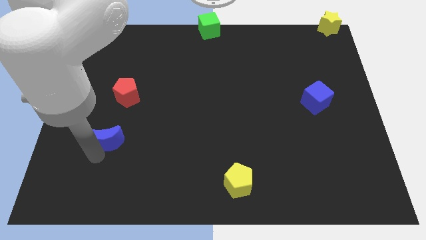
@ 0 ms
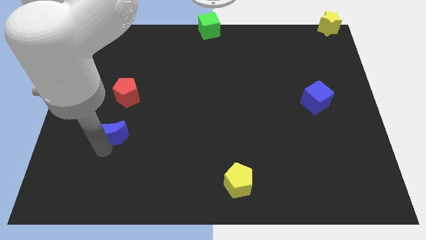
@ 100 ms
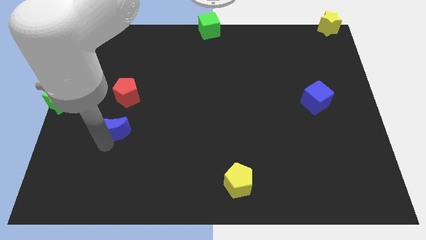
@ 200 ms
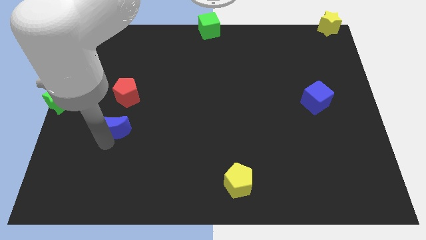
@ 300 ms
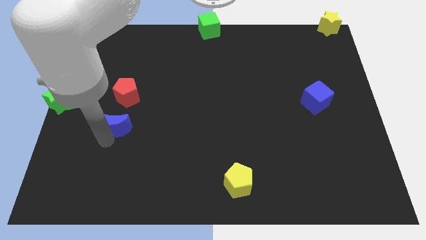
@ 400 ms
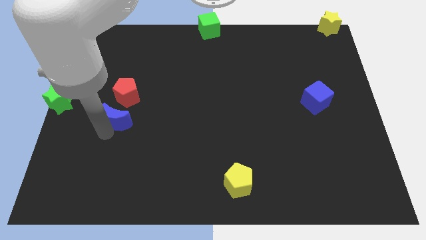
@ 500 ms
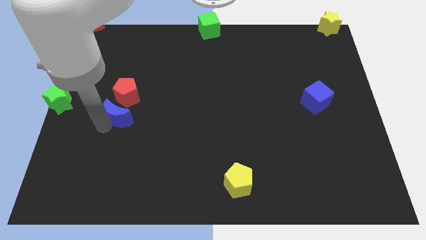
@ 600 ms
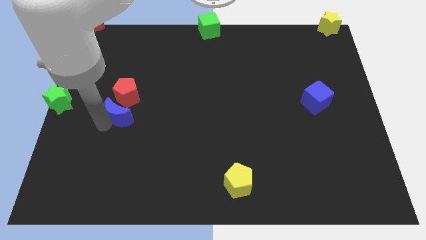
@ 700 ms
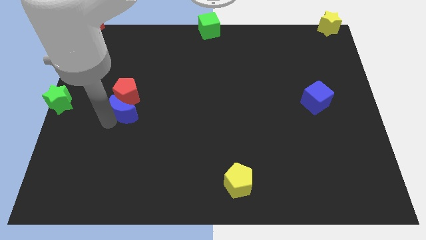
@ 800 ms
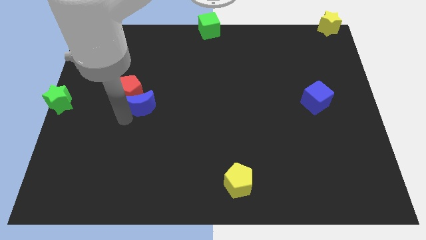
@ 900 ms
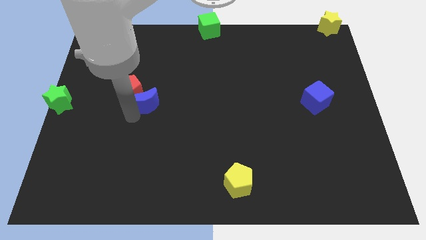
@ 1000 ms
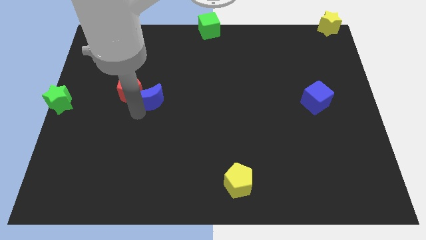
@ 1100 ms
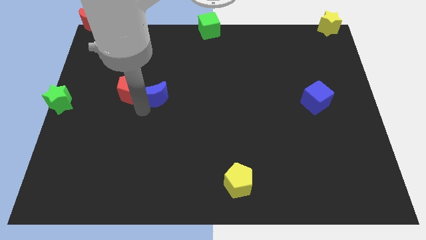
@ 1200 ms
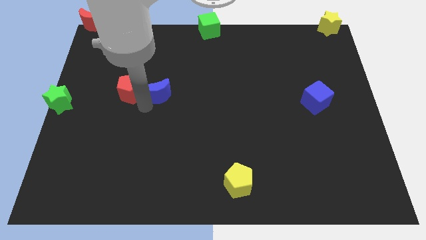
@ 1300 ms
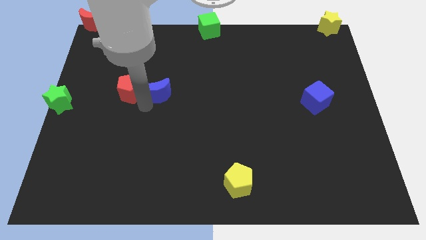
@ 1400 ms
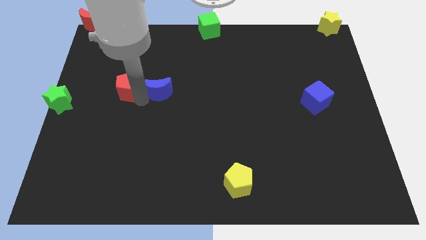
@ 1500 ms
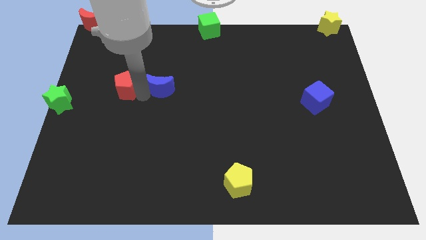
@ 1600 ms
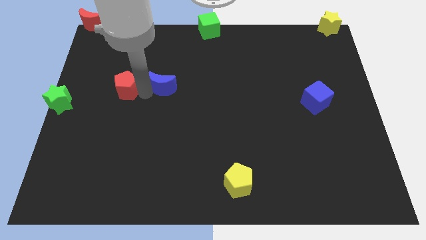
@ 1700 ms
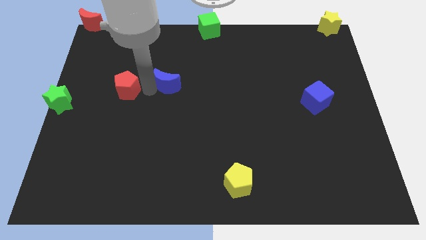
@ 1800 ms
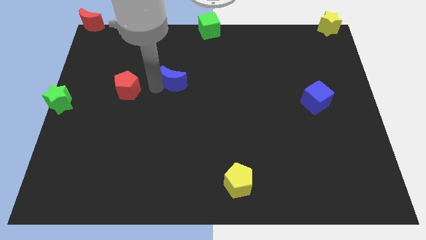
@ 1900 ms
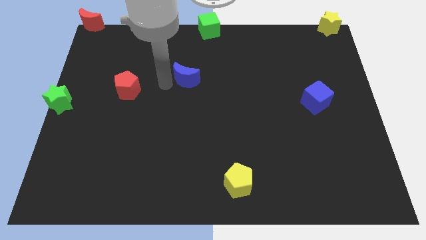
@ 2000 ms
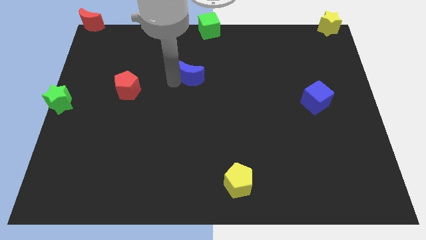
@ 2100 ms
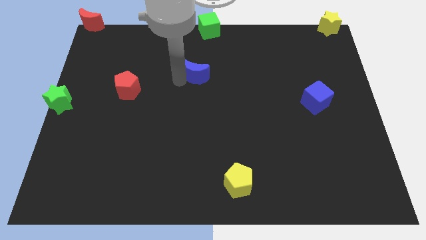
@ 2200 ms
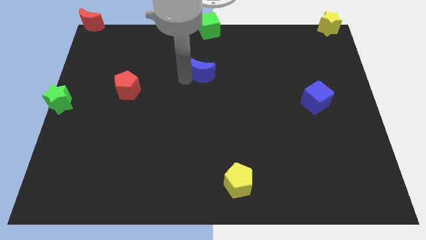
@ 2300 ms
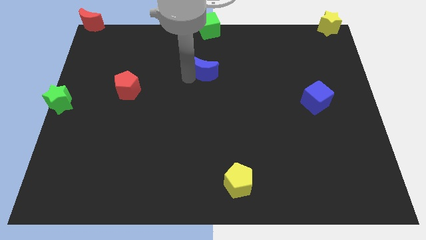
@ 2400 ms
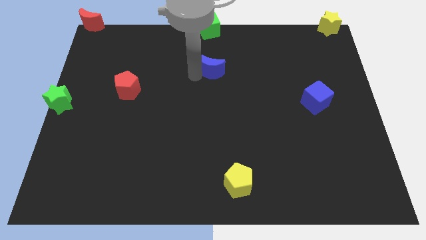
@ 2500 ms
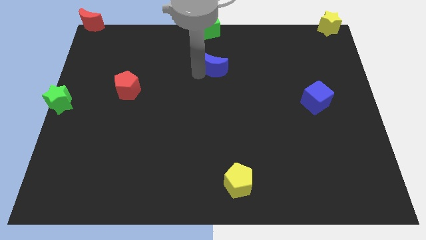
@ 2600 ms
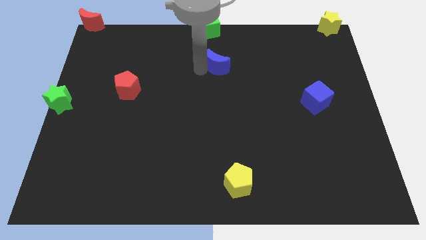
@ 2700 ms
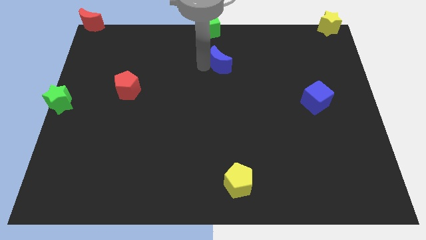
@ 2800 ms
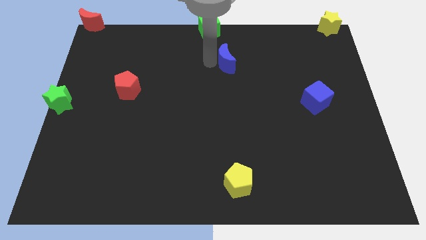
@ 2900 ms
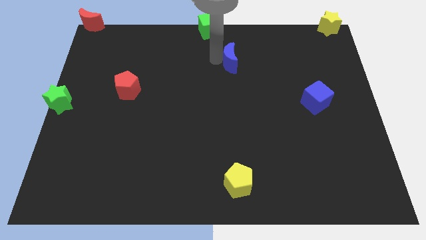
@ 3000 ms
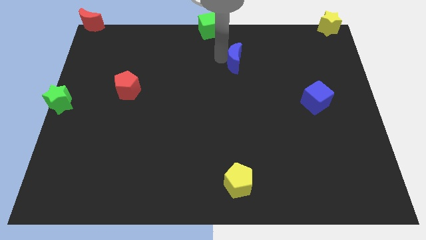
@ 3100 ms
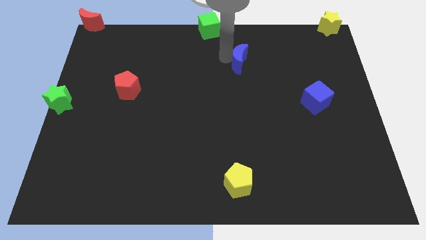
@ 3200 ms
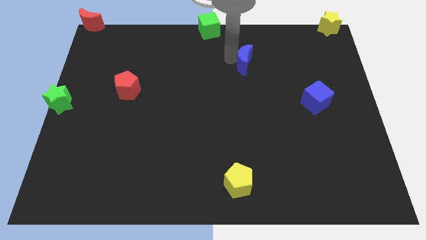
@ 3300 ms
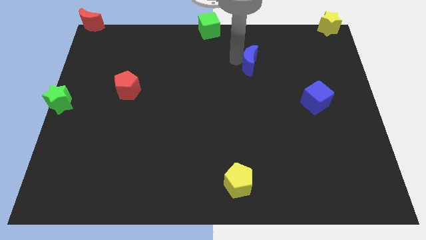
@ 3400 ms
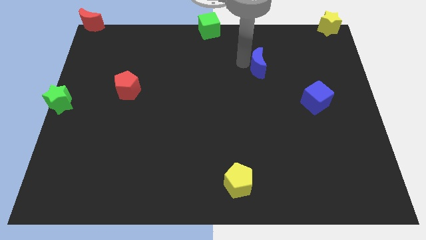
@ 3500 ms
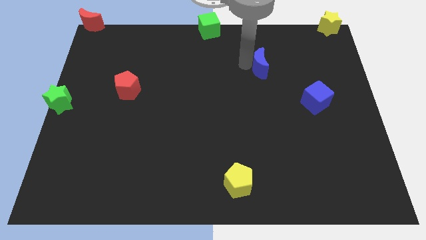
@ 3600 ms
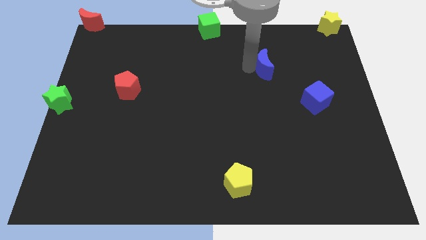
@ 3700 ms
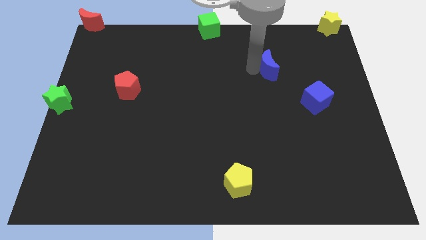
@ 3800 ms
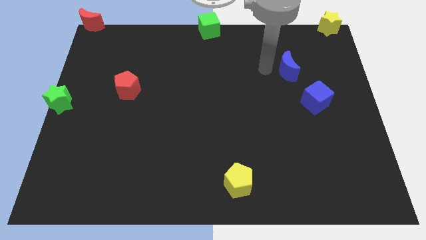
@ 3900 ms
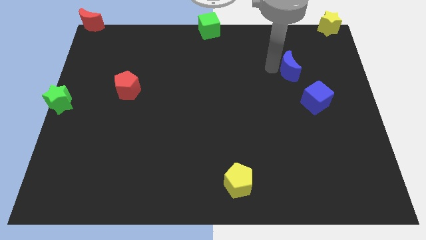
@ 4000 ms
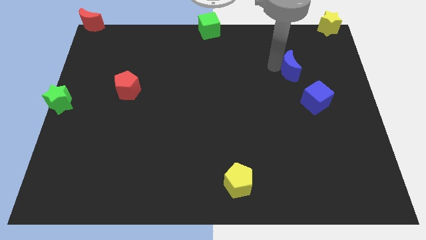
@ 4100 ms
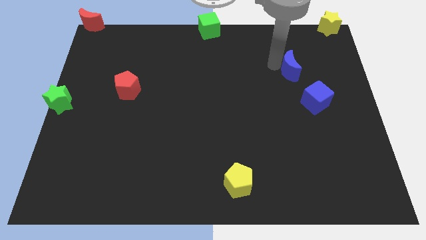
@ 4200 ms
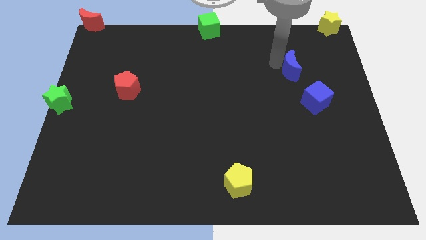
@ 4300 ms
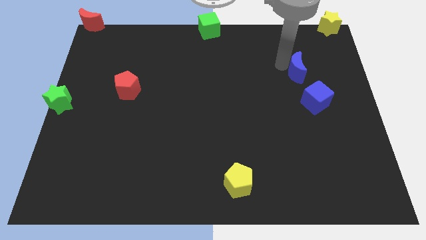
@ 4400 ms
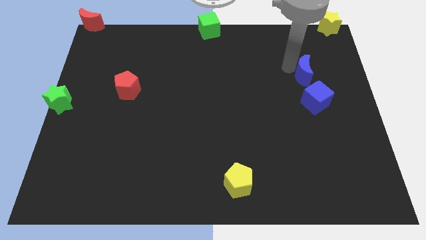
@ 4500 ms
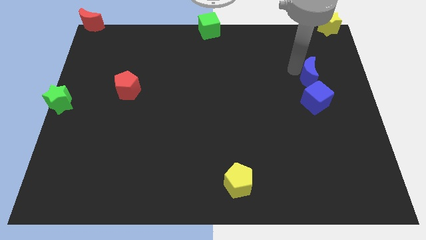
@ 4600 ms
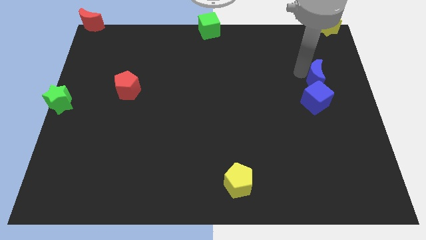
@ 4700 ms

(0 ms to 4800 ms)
push the blue crescent to the top of the blue cube

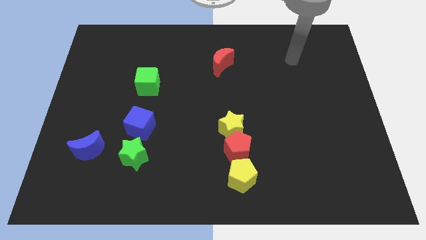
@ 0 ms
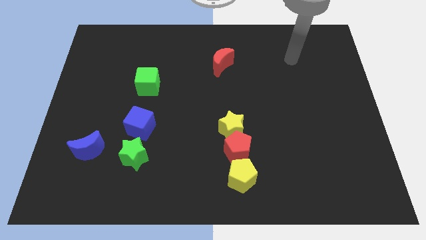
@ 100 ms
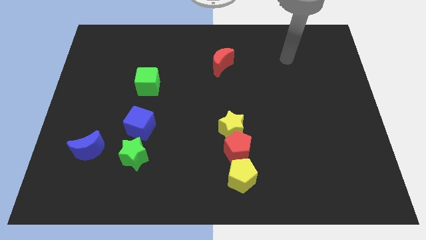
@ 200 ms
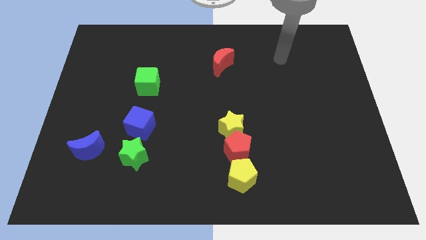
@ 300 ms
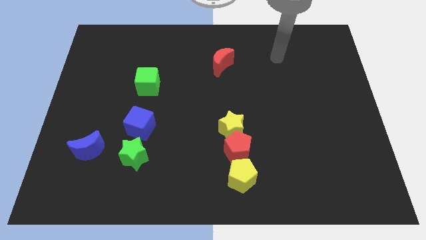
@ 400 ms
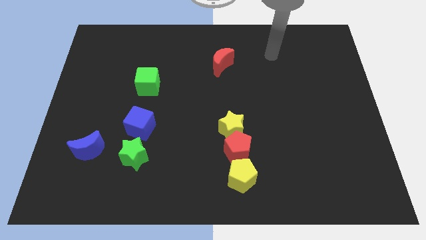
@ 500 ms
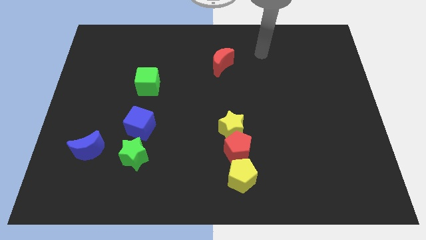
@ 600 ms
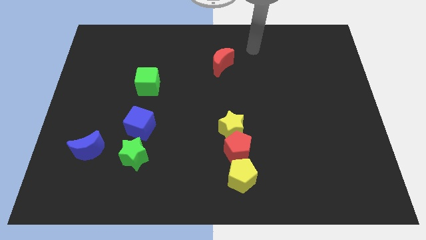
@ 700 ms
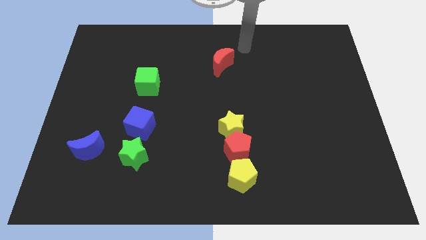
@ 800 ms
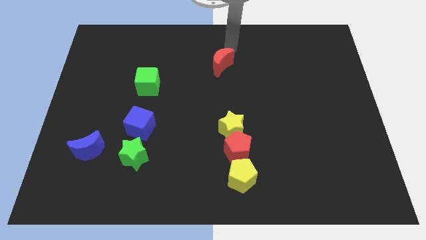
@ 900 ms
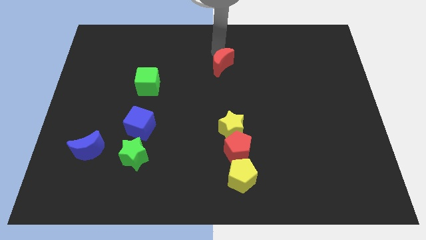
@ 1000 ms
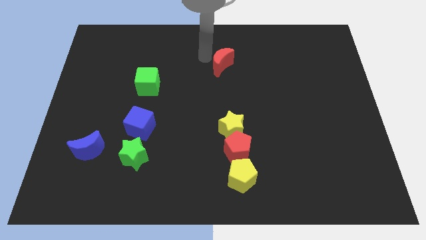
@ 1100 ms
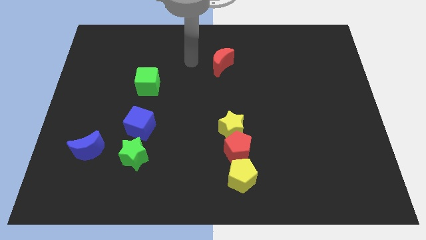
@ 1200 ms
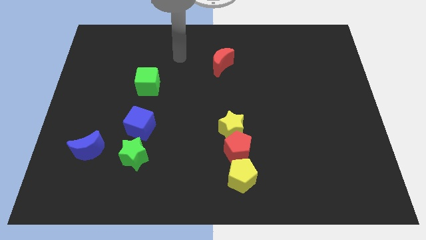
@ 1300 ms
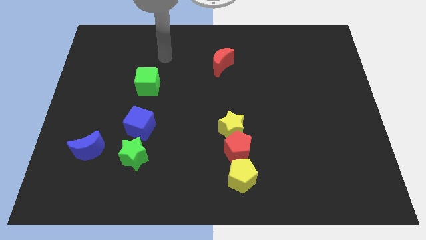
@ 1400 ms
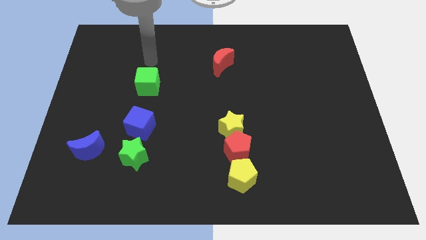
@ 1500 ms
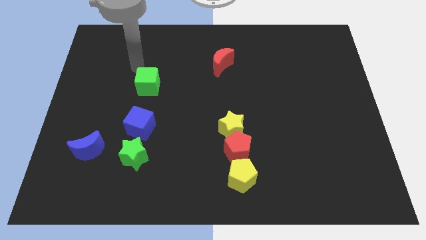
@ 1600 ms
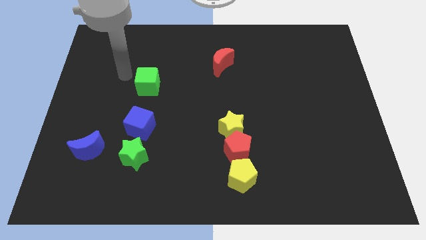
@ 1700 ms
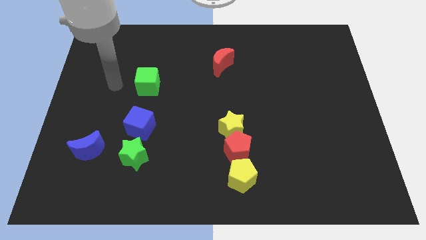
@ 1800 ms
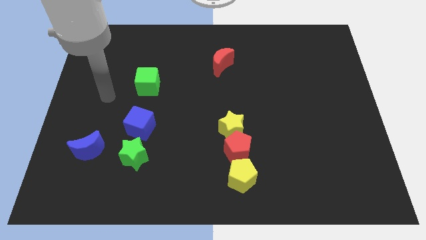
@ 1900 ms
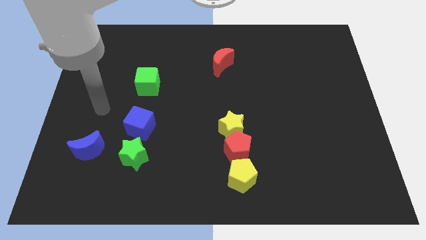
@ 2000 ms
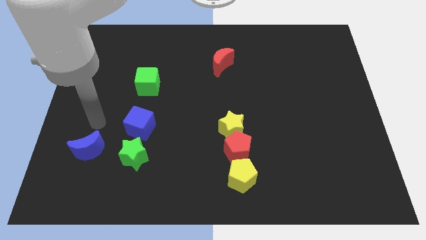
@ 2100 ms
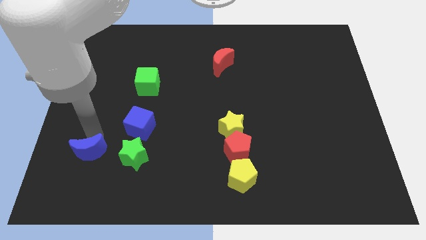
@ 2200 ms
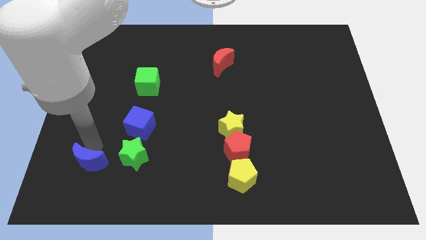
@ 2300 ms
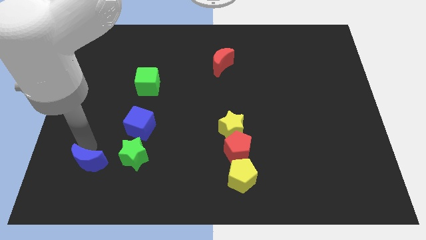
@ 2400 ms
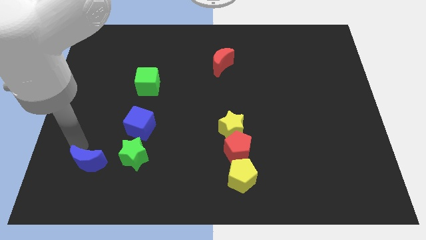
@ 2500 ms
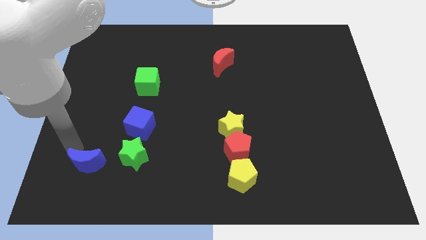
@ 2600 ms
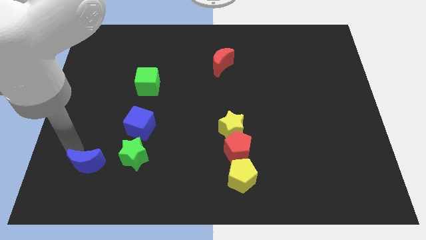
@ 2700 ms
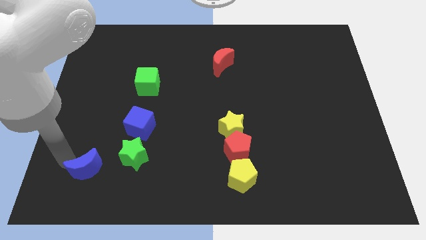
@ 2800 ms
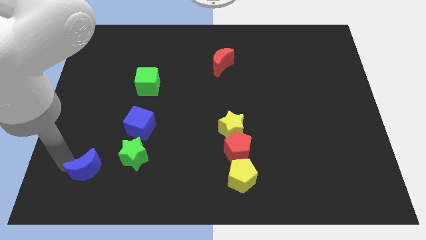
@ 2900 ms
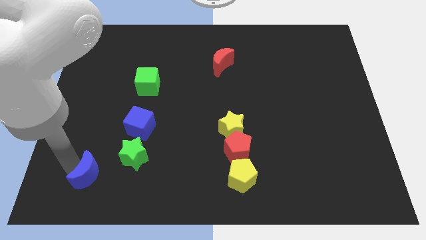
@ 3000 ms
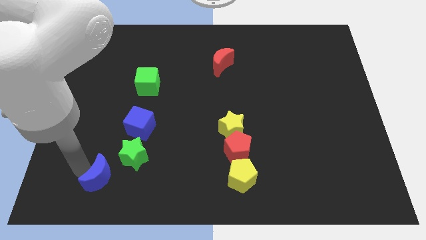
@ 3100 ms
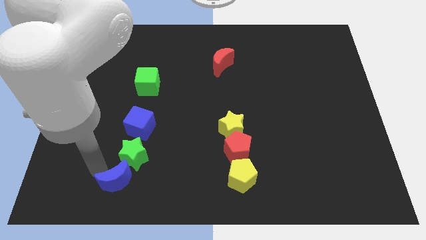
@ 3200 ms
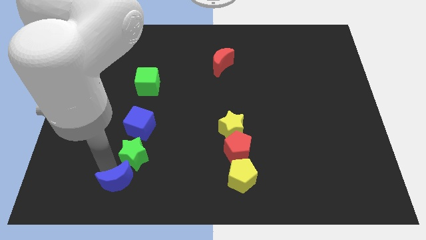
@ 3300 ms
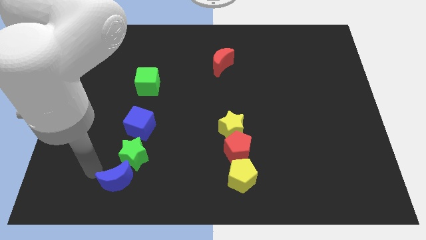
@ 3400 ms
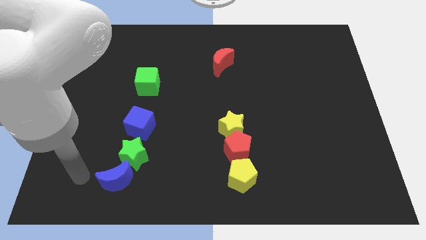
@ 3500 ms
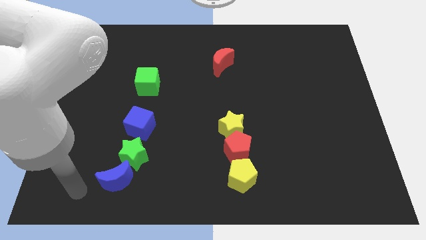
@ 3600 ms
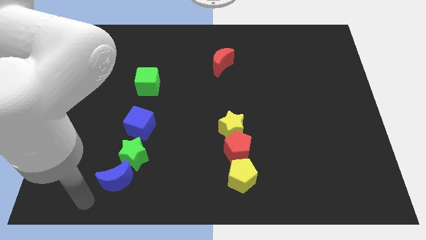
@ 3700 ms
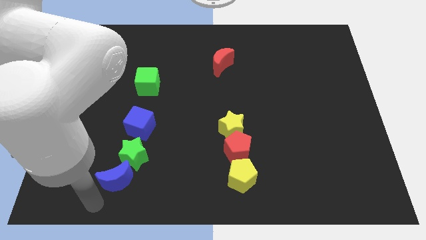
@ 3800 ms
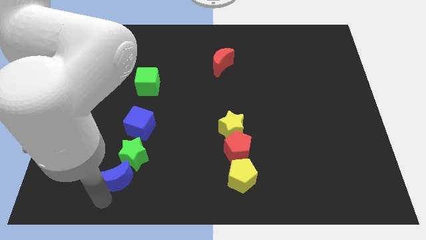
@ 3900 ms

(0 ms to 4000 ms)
move the blue crescent to the bottom left to the green star

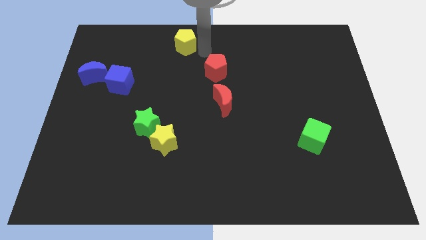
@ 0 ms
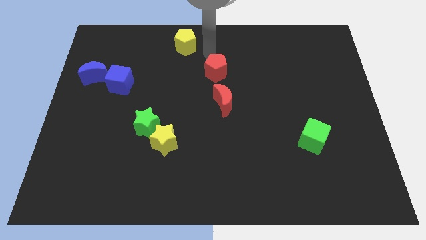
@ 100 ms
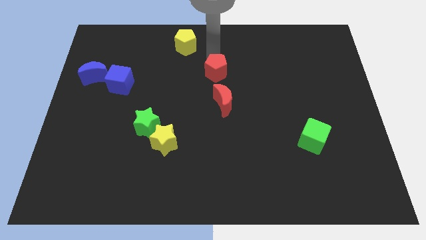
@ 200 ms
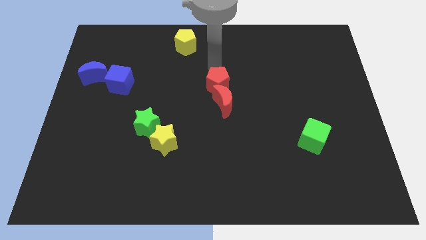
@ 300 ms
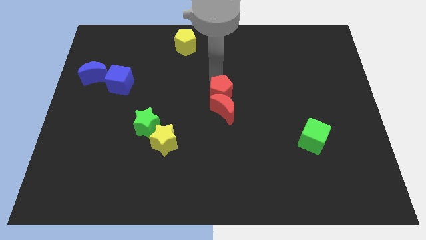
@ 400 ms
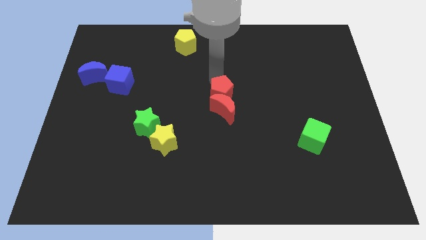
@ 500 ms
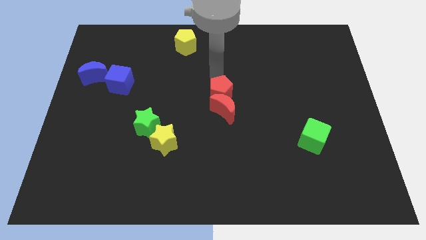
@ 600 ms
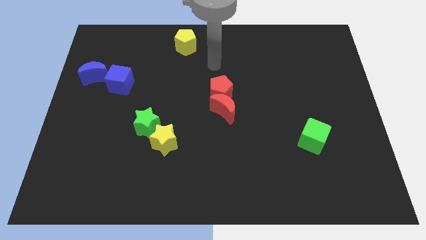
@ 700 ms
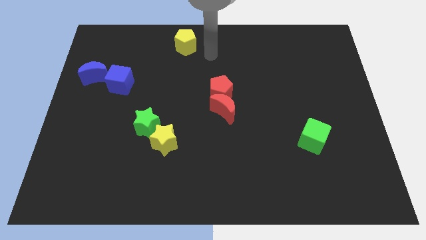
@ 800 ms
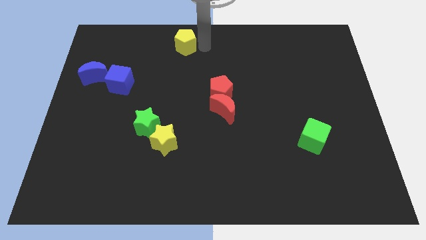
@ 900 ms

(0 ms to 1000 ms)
place the red blocks diagonally to stars
